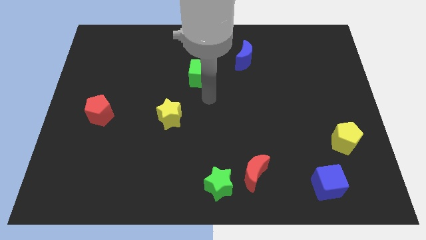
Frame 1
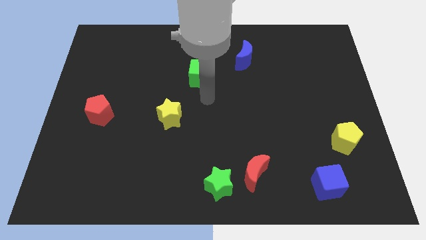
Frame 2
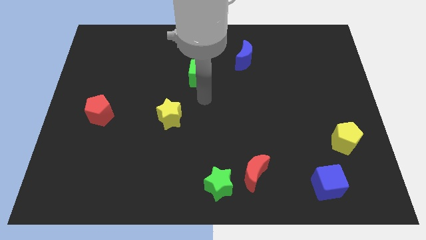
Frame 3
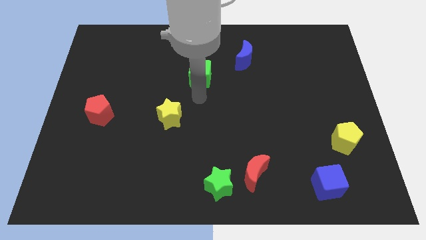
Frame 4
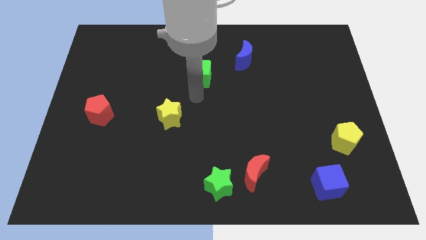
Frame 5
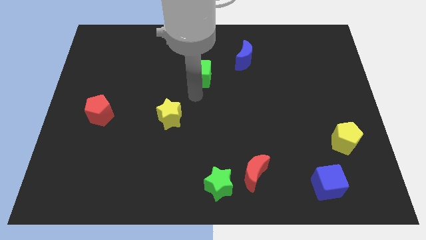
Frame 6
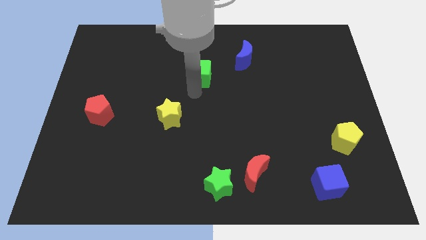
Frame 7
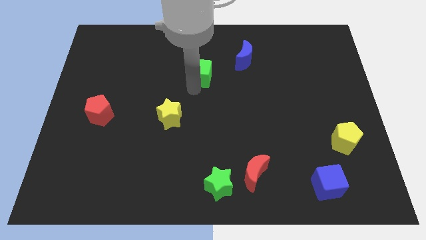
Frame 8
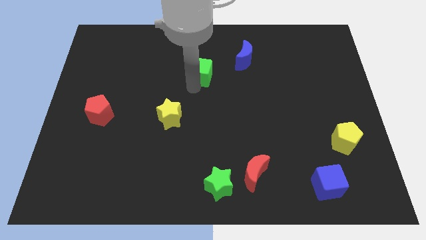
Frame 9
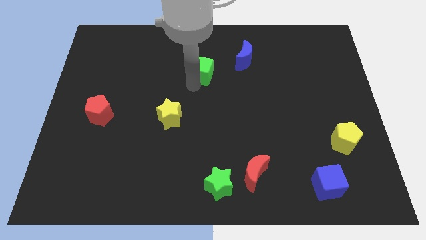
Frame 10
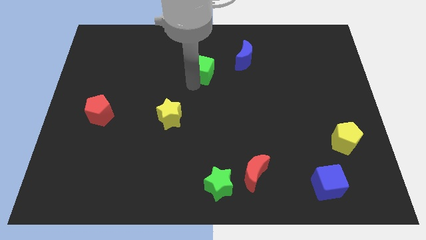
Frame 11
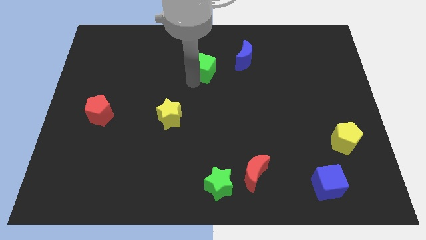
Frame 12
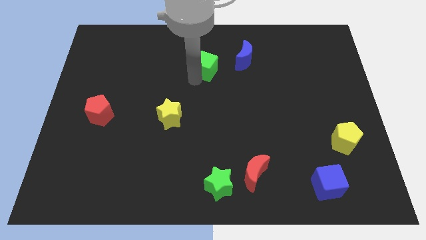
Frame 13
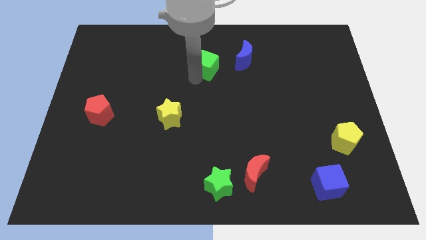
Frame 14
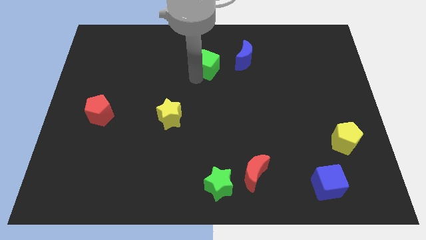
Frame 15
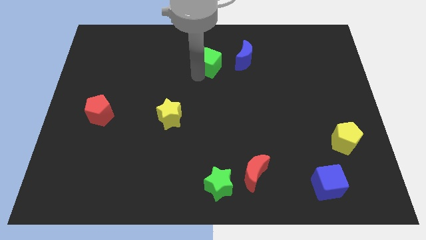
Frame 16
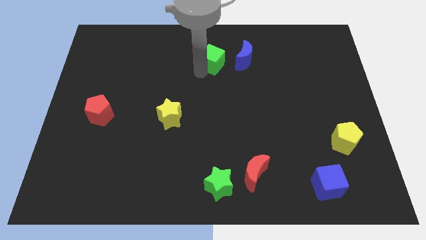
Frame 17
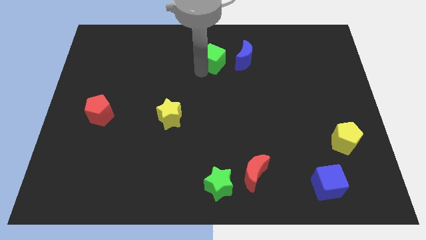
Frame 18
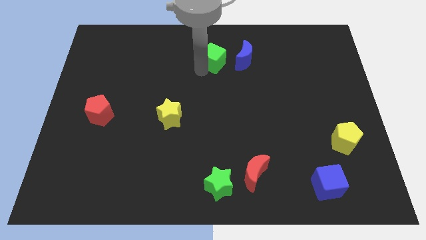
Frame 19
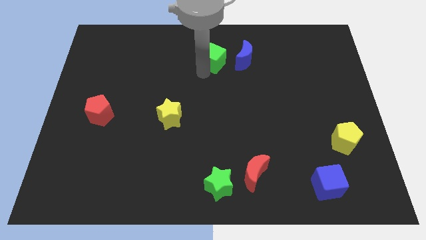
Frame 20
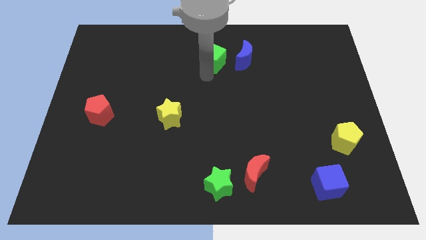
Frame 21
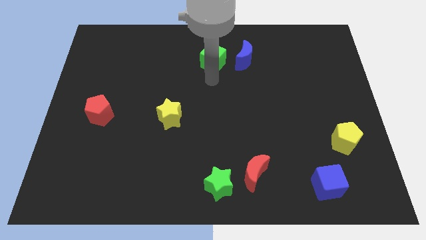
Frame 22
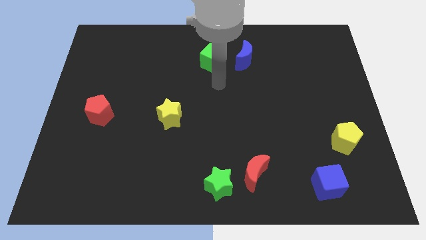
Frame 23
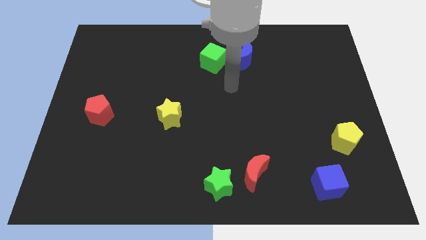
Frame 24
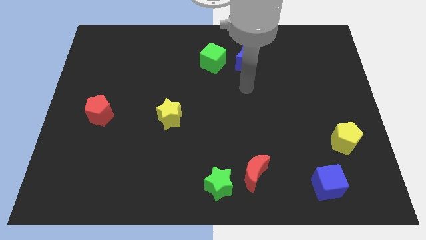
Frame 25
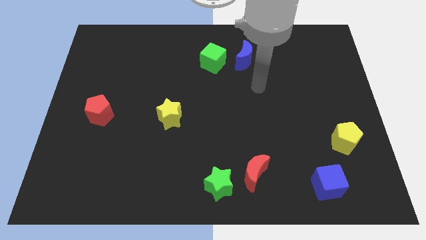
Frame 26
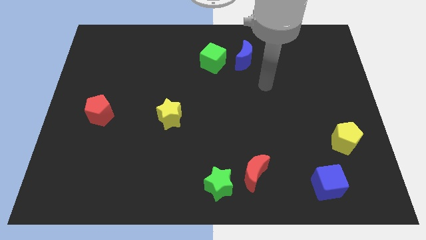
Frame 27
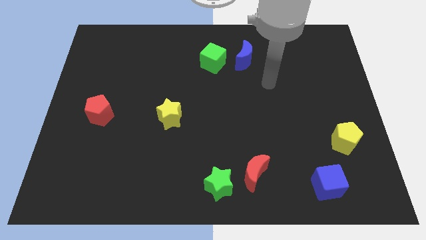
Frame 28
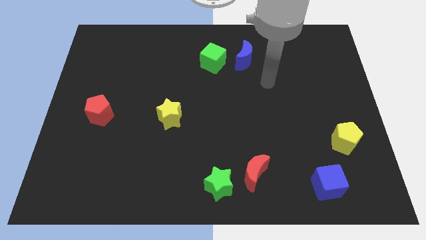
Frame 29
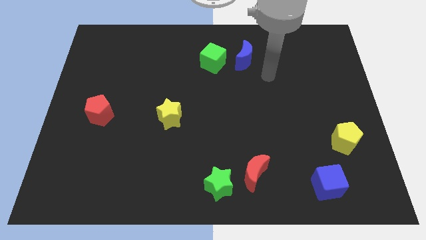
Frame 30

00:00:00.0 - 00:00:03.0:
push green cube slightly upwards

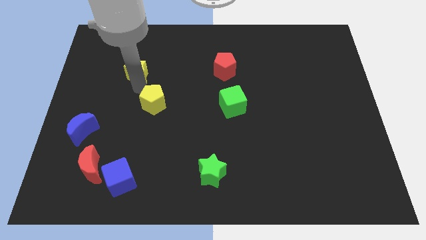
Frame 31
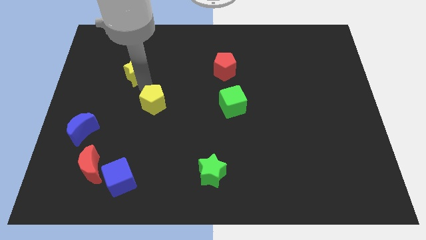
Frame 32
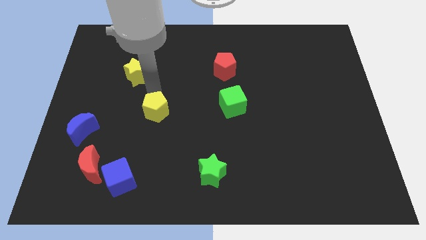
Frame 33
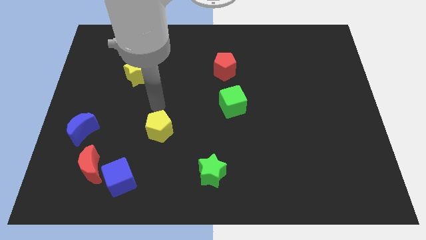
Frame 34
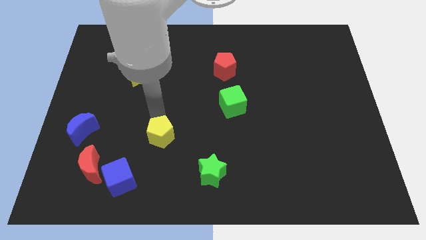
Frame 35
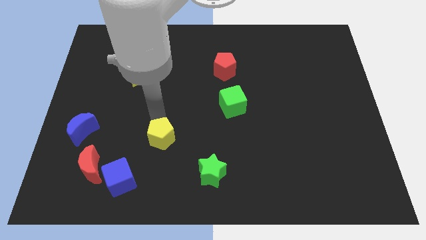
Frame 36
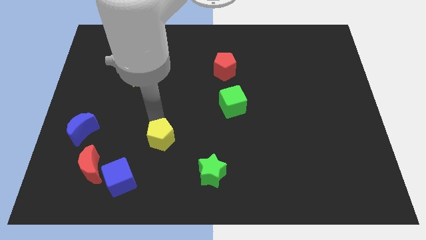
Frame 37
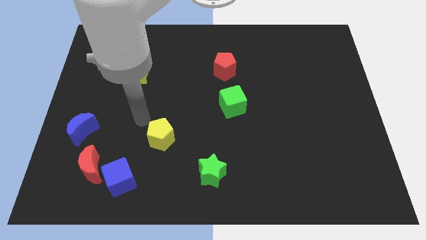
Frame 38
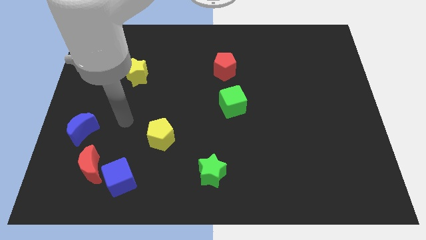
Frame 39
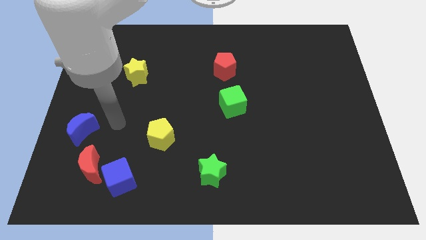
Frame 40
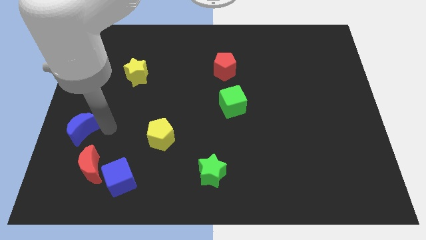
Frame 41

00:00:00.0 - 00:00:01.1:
push the yellow pentagon to the top left of the green star

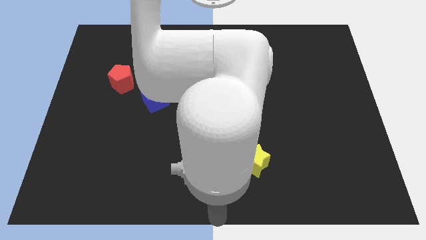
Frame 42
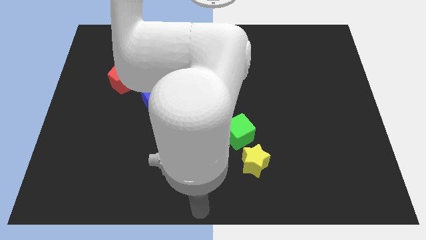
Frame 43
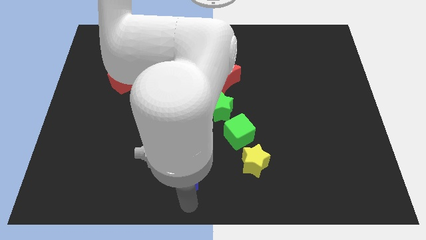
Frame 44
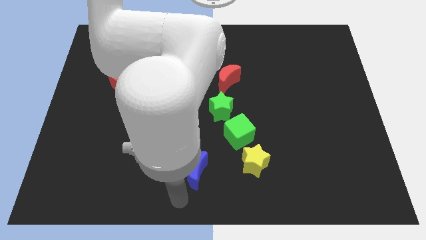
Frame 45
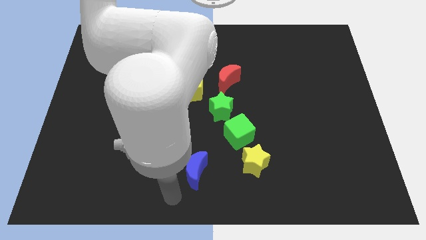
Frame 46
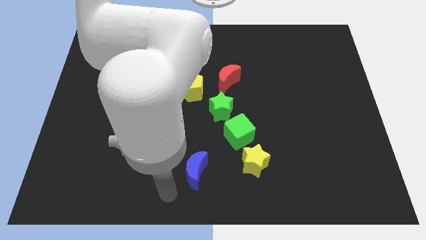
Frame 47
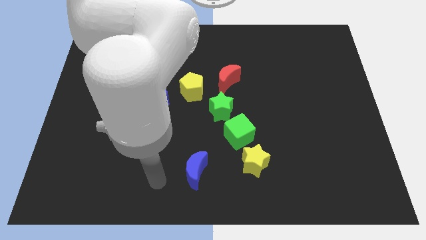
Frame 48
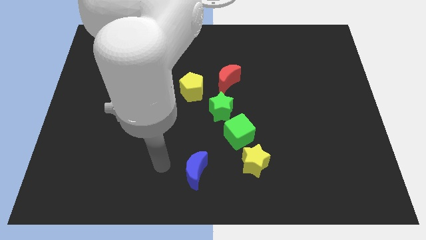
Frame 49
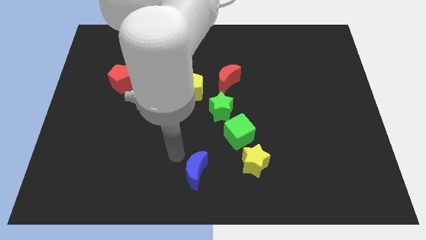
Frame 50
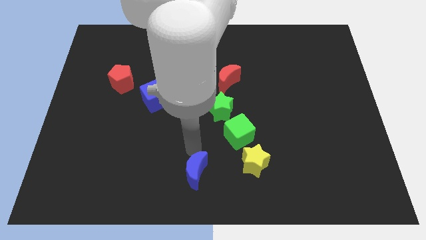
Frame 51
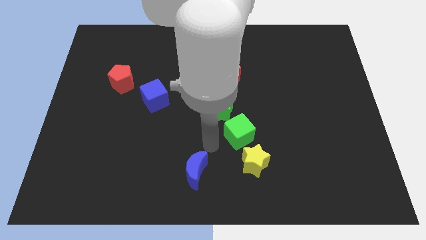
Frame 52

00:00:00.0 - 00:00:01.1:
place your arm on top of blue moon

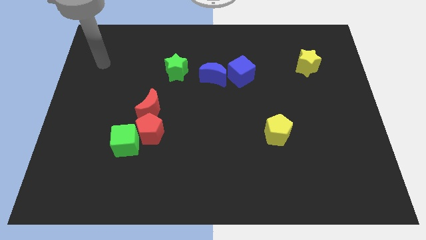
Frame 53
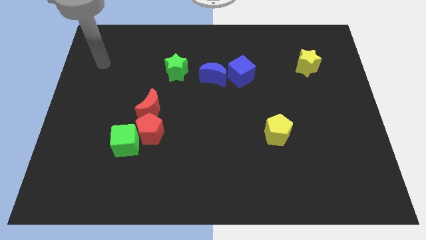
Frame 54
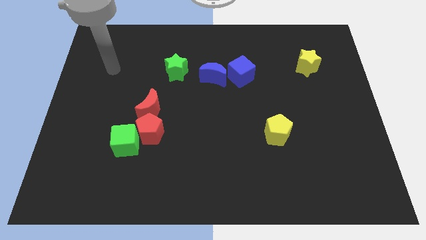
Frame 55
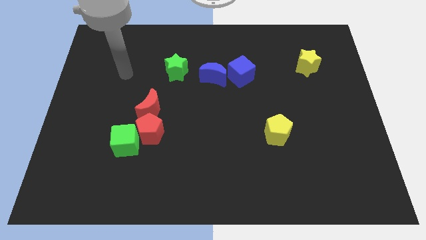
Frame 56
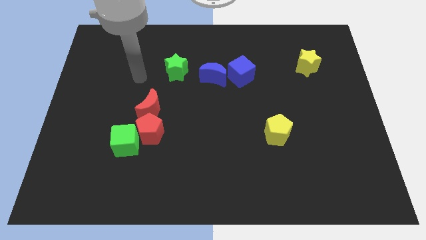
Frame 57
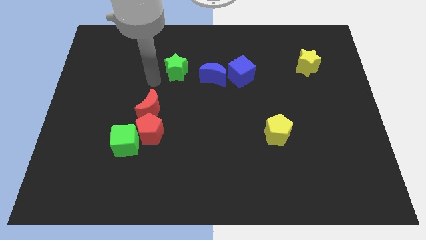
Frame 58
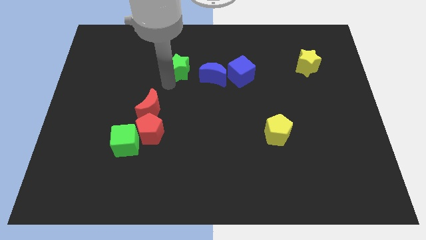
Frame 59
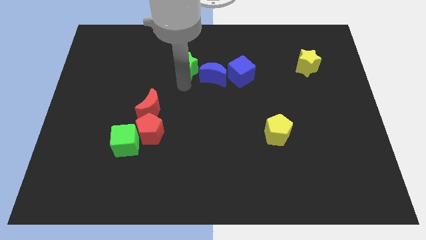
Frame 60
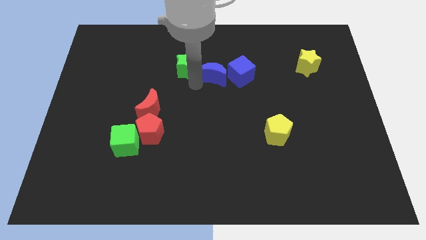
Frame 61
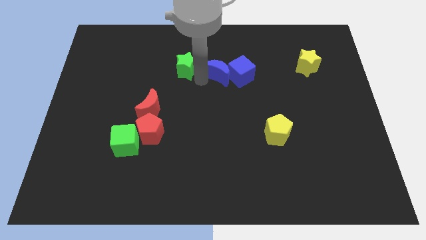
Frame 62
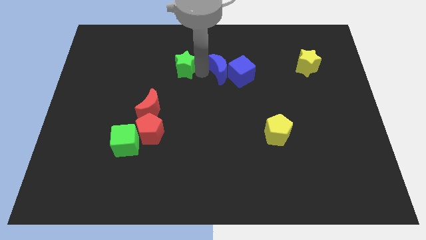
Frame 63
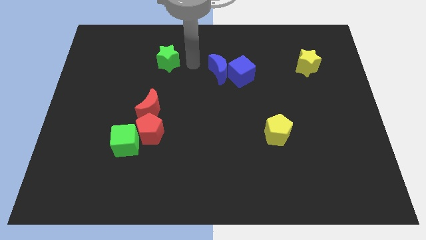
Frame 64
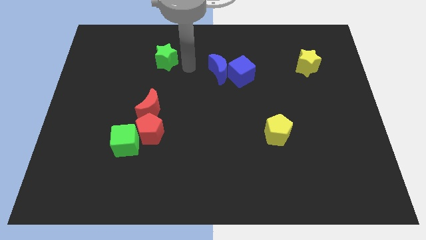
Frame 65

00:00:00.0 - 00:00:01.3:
move your arm close to the green

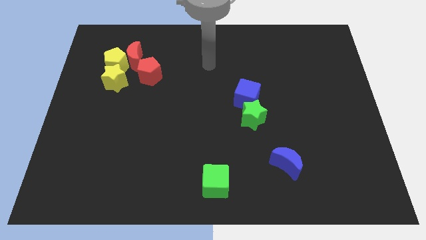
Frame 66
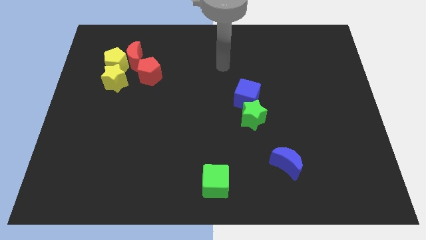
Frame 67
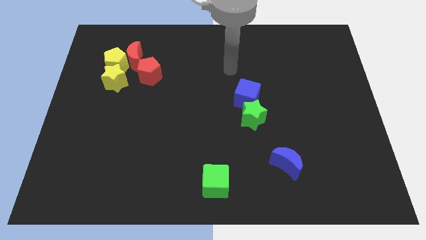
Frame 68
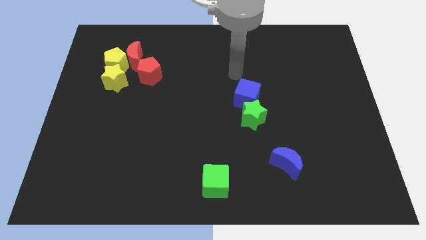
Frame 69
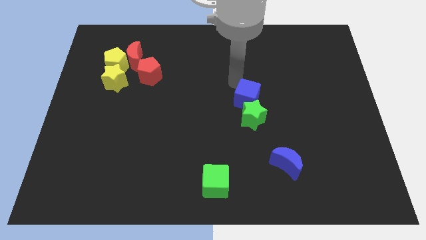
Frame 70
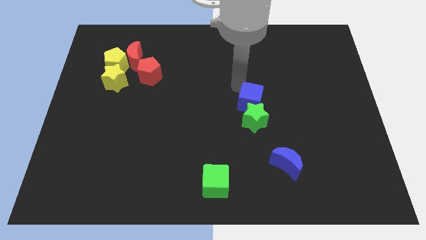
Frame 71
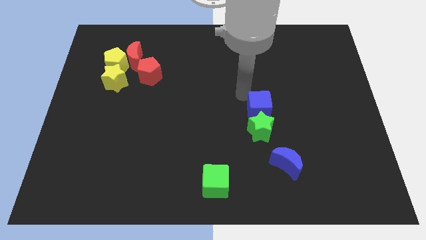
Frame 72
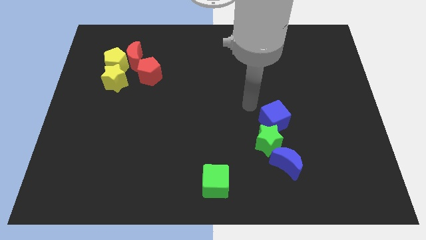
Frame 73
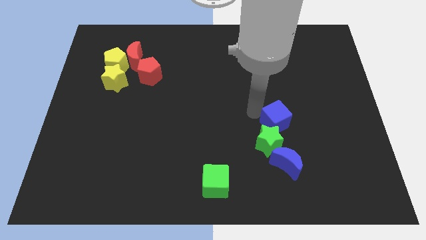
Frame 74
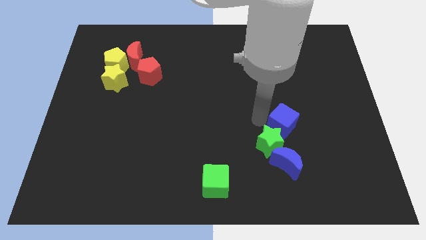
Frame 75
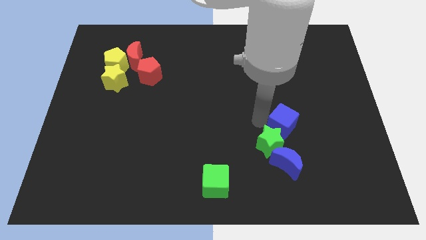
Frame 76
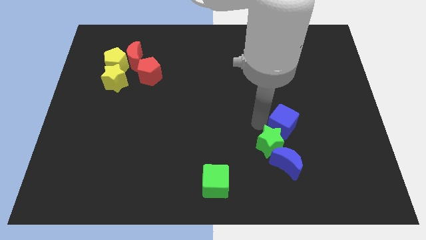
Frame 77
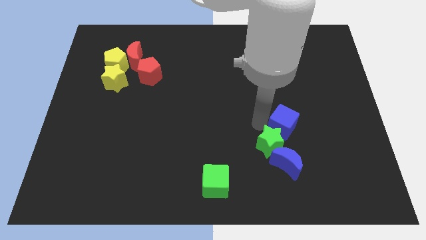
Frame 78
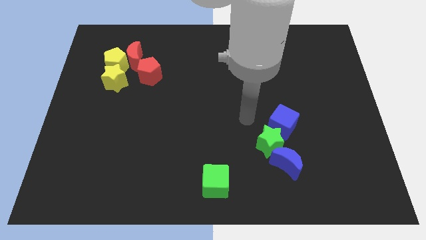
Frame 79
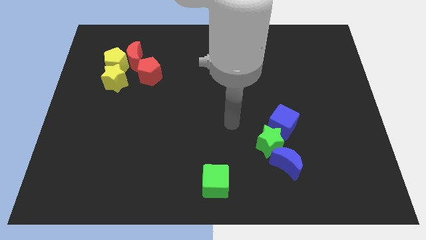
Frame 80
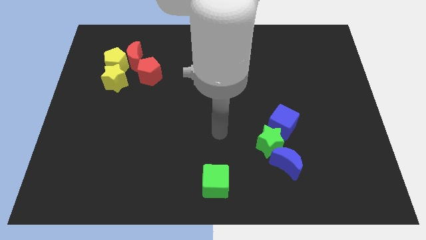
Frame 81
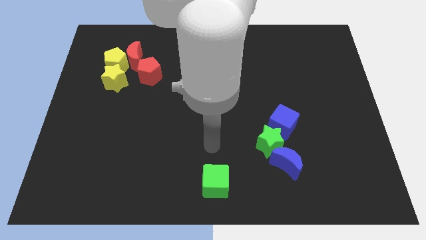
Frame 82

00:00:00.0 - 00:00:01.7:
push the green star with the blue cube into the blue moon

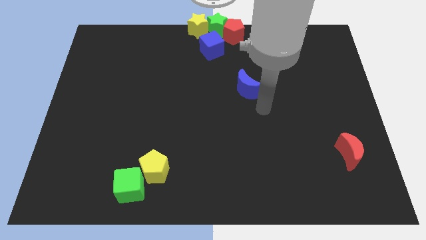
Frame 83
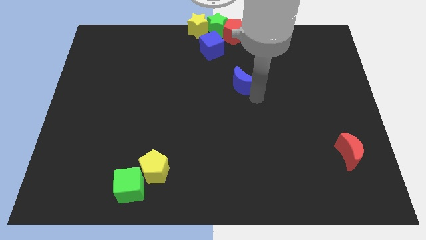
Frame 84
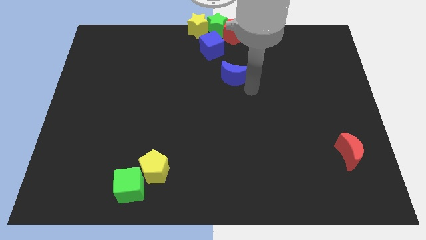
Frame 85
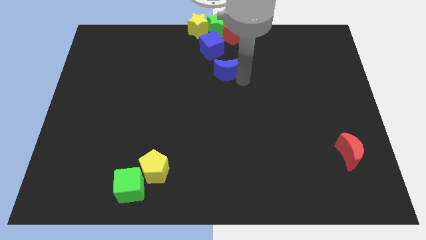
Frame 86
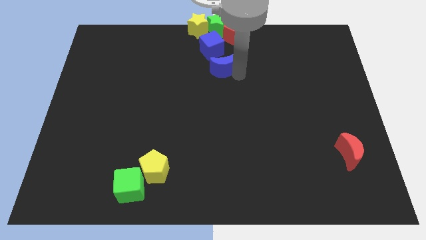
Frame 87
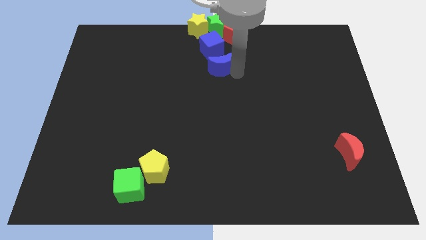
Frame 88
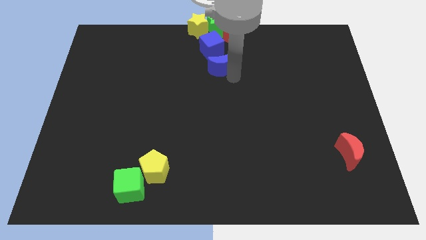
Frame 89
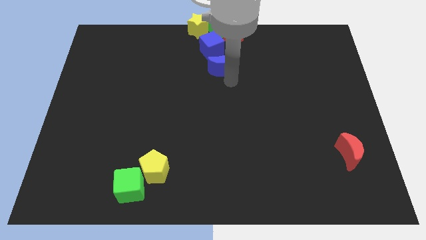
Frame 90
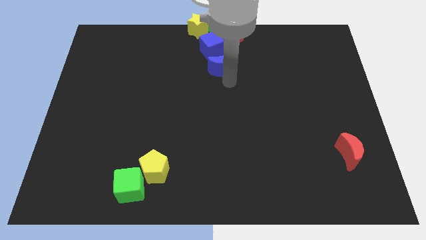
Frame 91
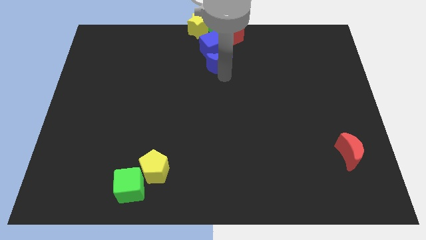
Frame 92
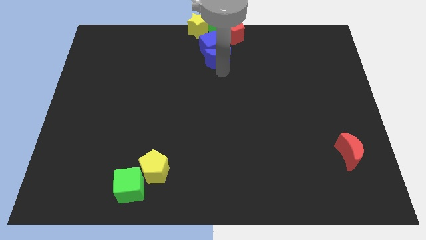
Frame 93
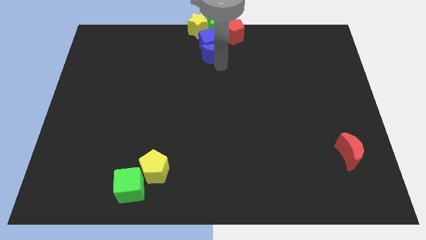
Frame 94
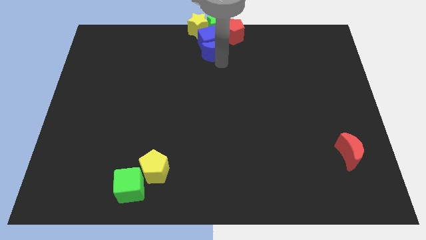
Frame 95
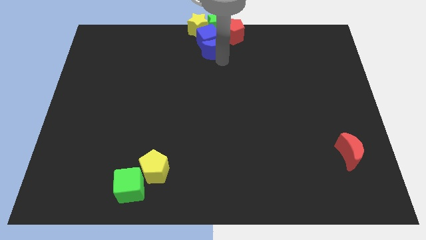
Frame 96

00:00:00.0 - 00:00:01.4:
move the blue moon vertically below the blue cube
